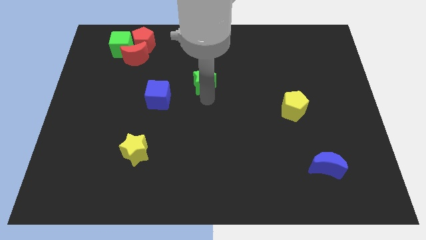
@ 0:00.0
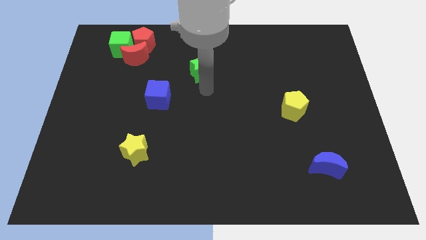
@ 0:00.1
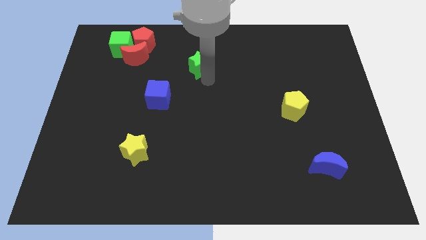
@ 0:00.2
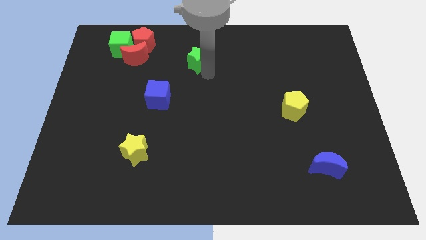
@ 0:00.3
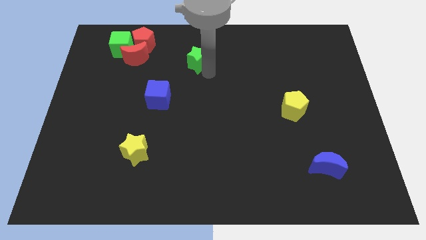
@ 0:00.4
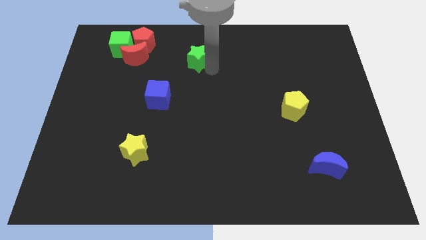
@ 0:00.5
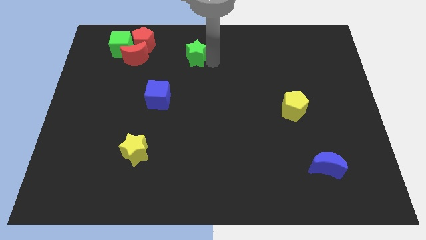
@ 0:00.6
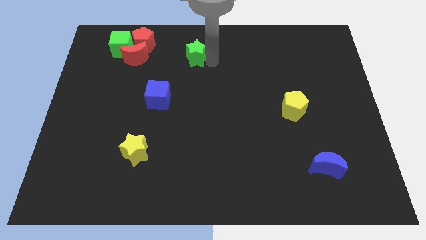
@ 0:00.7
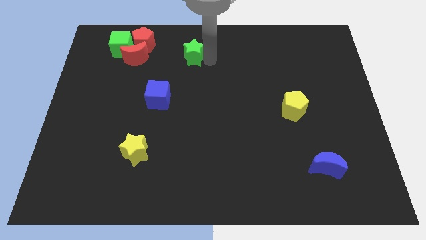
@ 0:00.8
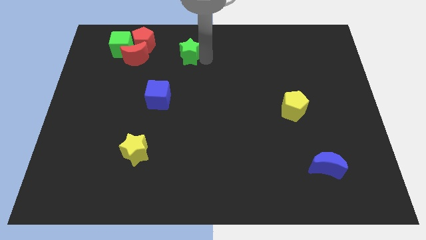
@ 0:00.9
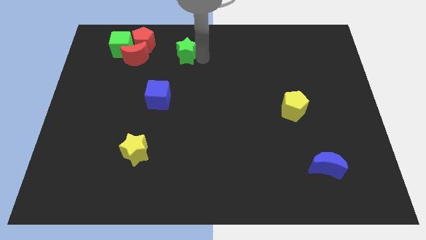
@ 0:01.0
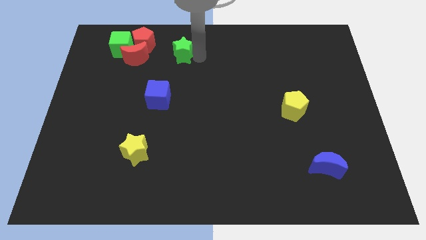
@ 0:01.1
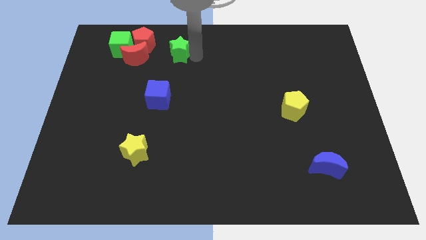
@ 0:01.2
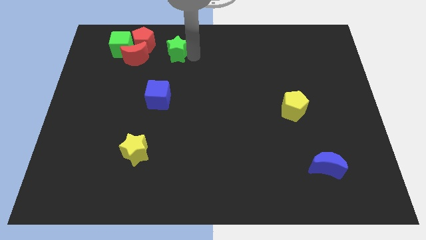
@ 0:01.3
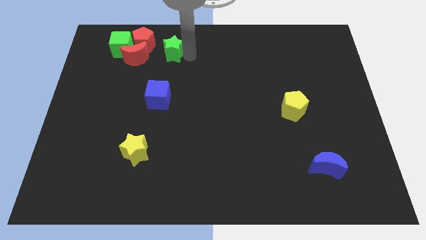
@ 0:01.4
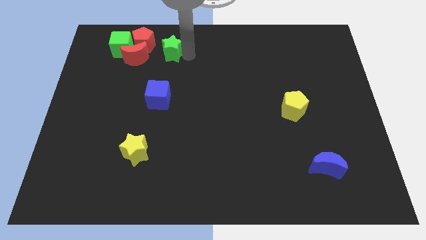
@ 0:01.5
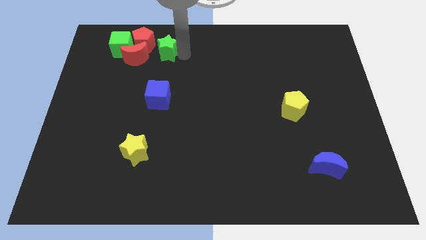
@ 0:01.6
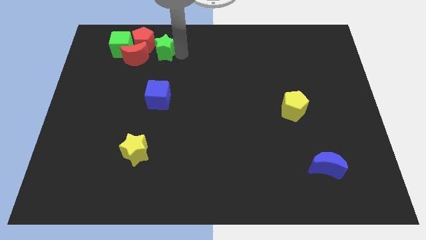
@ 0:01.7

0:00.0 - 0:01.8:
place the green star above the blue cube

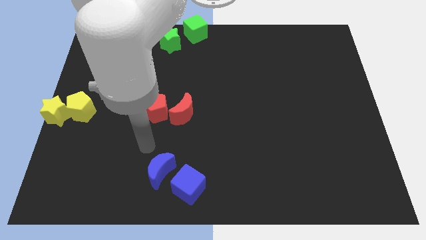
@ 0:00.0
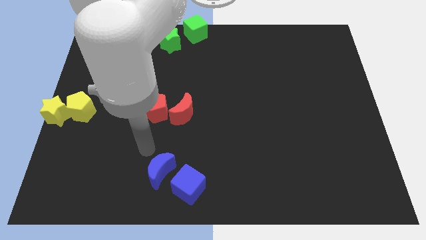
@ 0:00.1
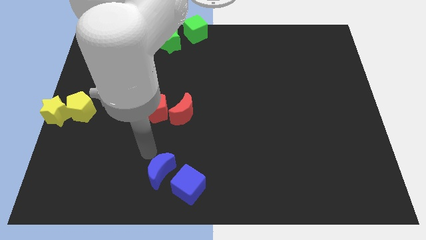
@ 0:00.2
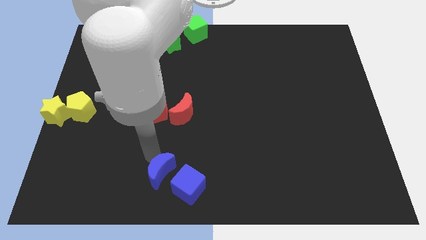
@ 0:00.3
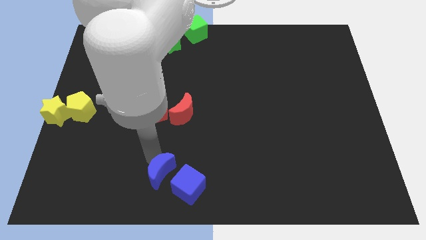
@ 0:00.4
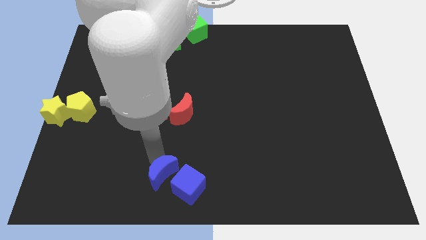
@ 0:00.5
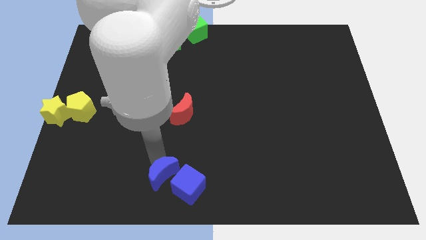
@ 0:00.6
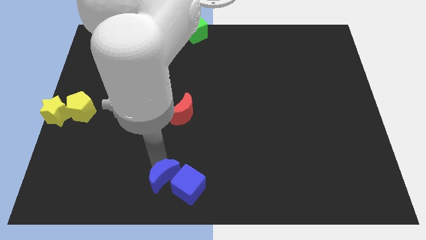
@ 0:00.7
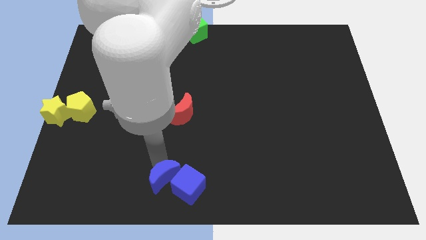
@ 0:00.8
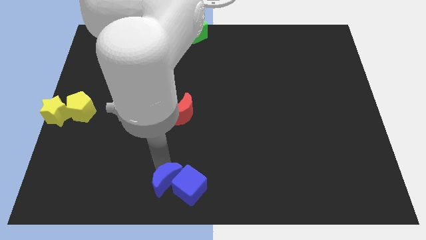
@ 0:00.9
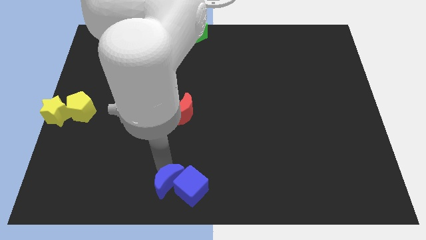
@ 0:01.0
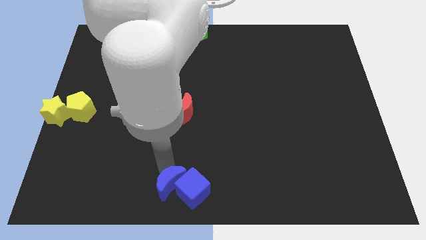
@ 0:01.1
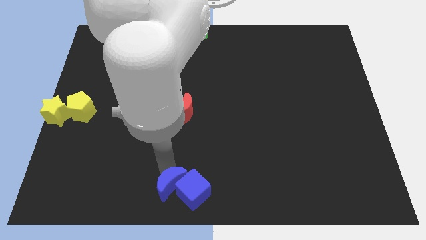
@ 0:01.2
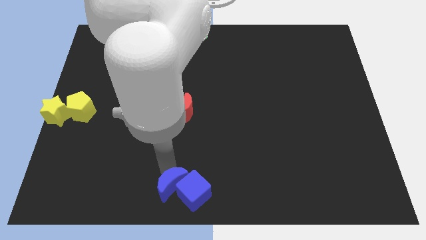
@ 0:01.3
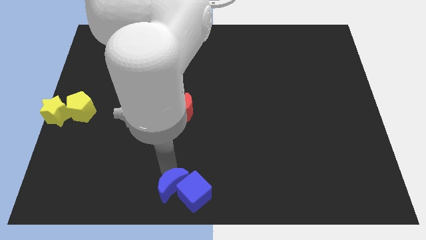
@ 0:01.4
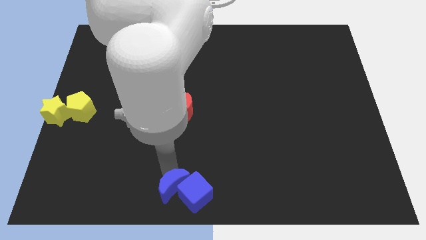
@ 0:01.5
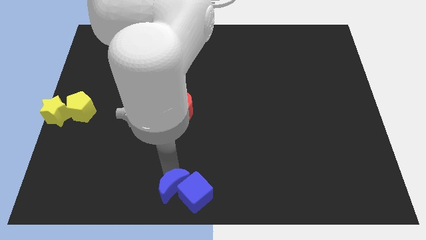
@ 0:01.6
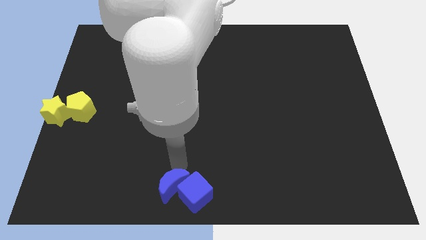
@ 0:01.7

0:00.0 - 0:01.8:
slightly move blue moon close to the blue cube

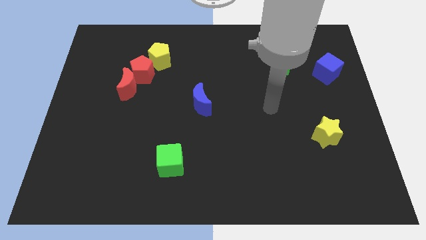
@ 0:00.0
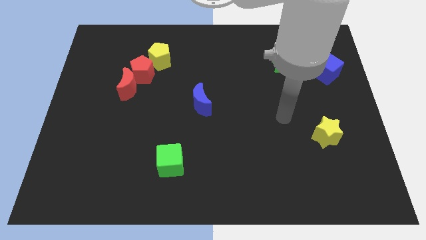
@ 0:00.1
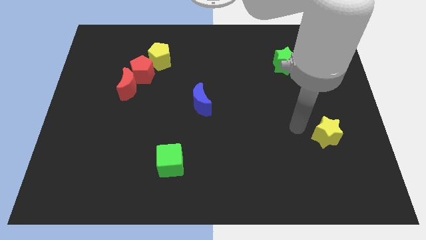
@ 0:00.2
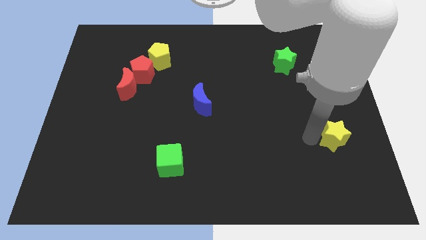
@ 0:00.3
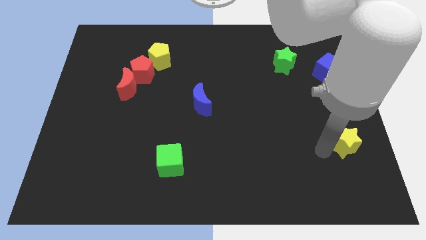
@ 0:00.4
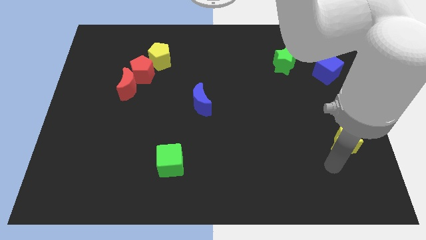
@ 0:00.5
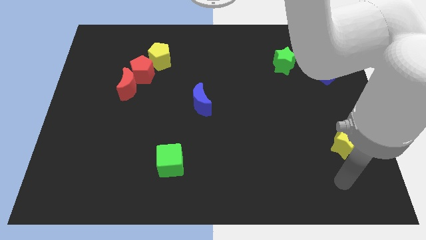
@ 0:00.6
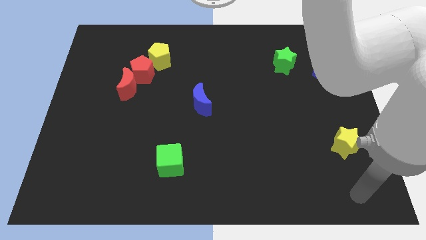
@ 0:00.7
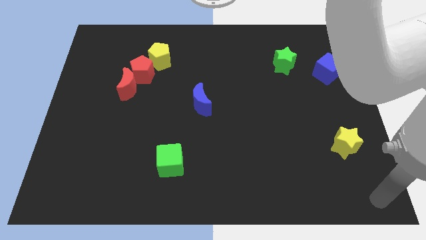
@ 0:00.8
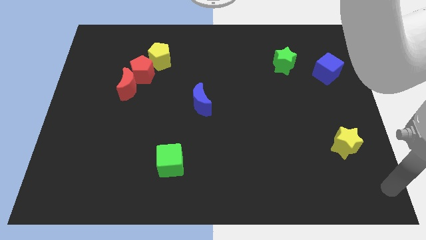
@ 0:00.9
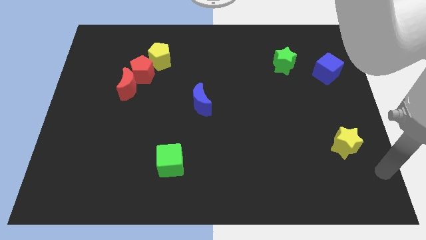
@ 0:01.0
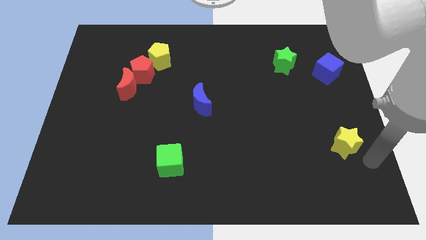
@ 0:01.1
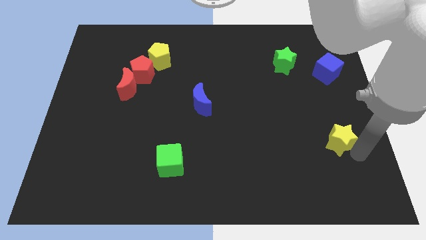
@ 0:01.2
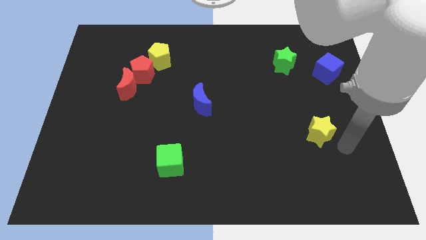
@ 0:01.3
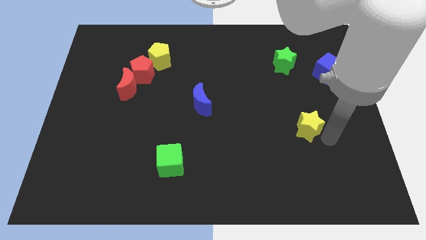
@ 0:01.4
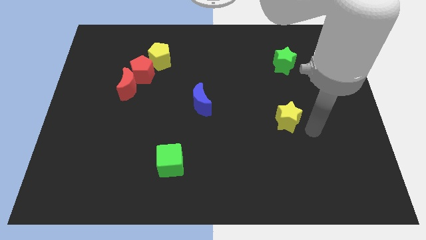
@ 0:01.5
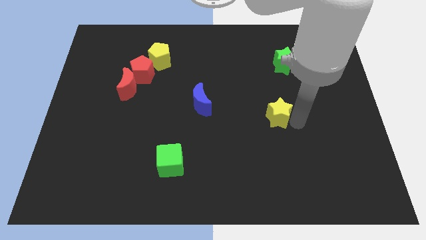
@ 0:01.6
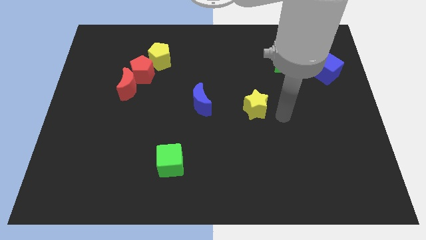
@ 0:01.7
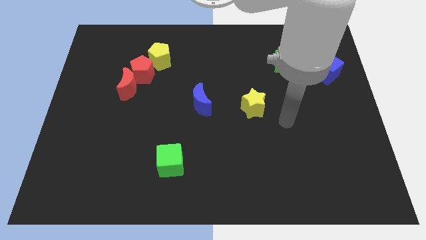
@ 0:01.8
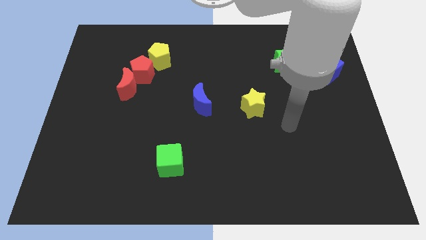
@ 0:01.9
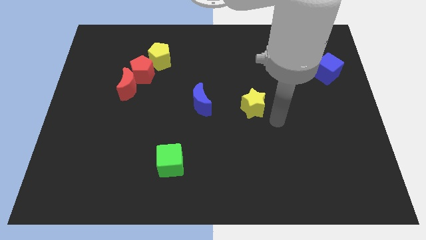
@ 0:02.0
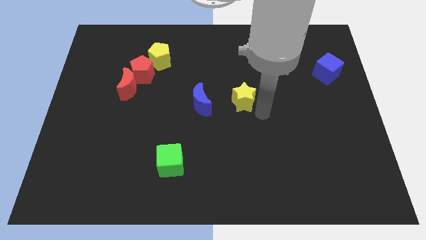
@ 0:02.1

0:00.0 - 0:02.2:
slide the yellow star towards the center

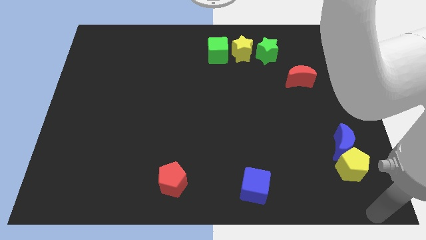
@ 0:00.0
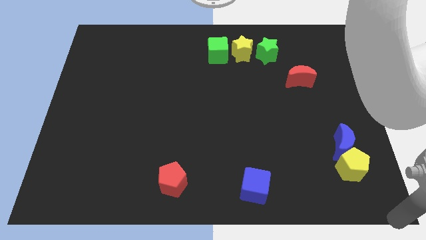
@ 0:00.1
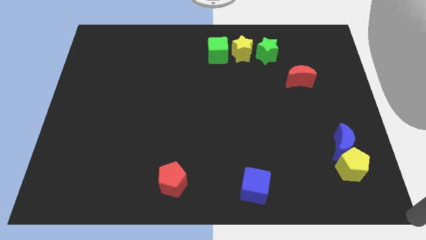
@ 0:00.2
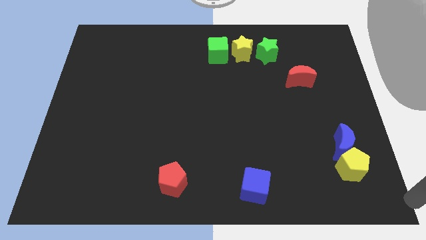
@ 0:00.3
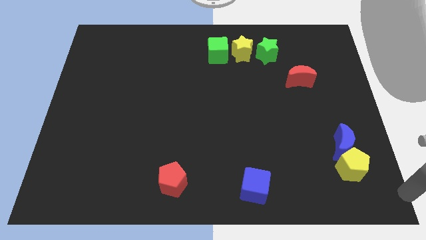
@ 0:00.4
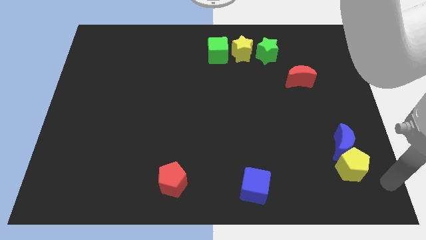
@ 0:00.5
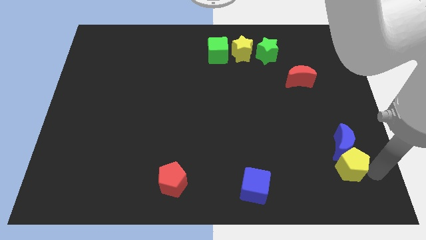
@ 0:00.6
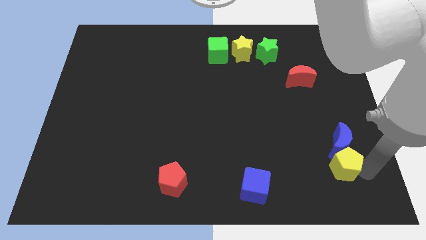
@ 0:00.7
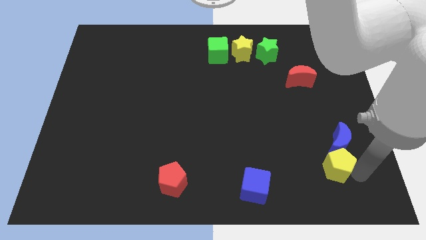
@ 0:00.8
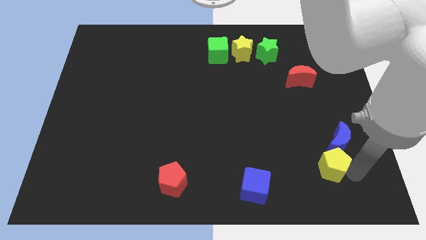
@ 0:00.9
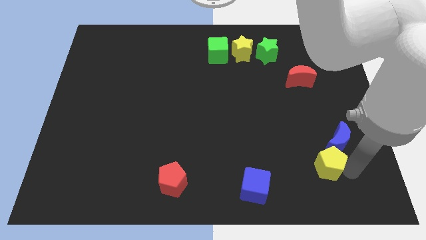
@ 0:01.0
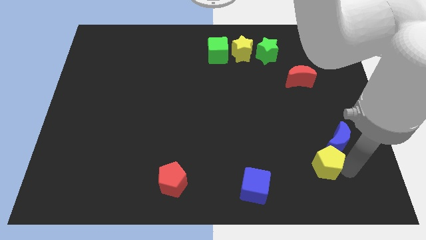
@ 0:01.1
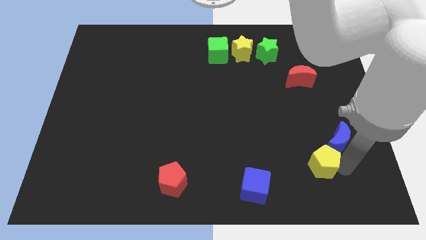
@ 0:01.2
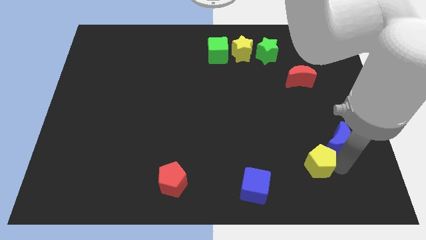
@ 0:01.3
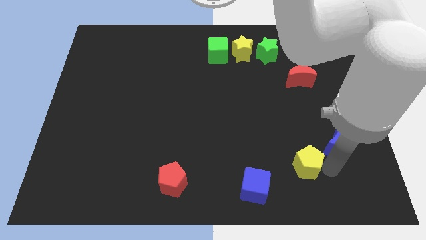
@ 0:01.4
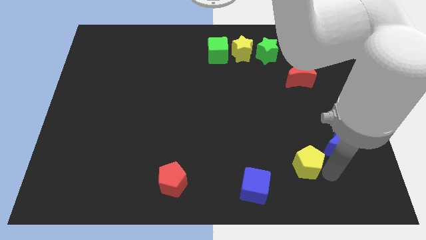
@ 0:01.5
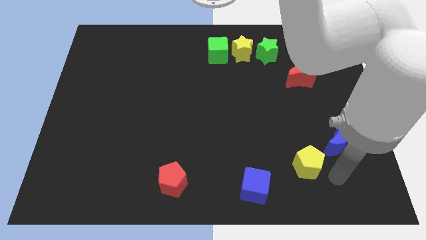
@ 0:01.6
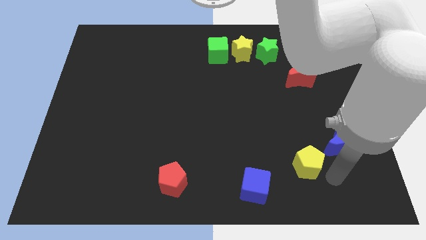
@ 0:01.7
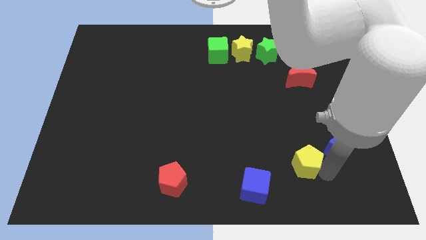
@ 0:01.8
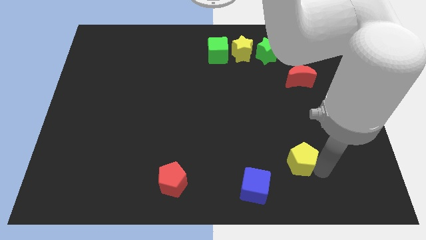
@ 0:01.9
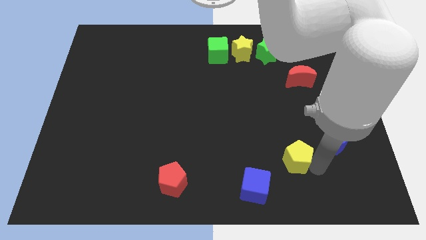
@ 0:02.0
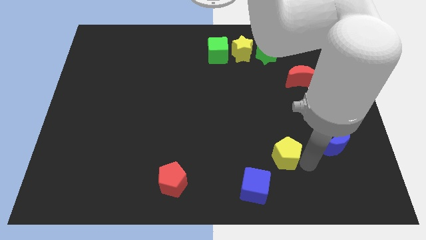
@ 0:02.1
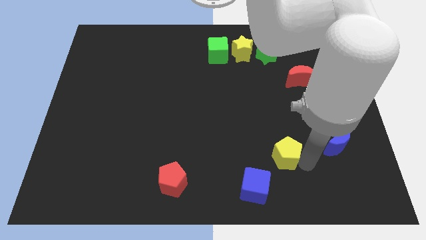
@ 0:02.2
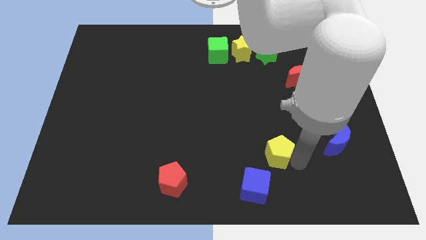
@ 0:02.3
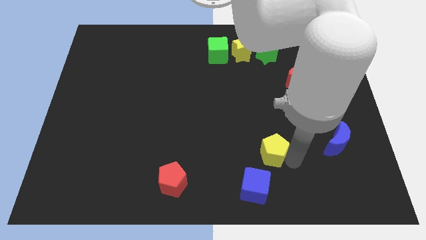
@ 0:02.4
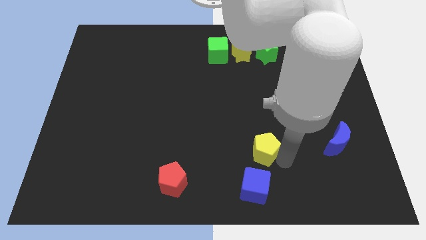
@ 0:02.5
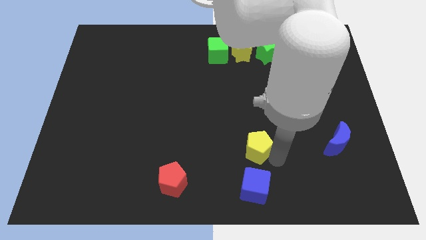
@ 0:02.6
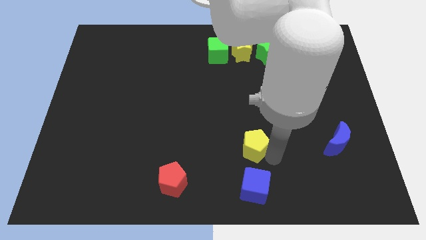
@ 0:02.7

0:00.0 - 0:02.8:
place yellow pentagon on top of blue cube

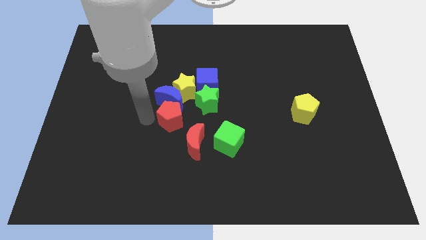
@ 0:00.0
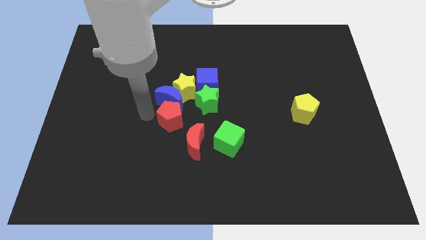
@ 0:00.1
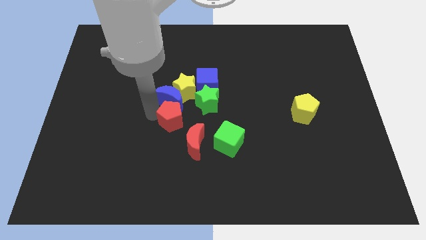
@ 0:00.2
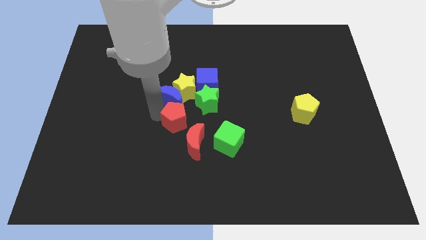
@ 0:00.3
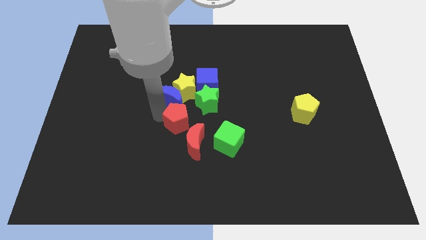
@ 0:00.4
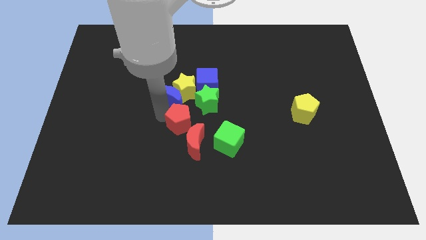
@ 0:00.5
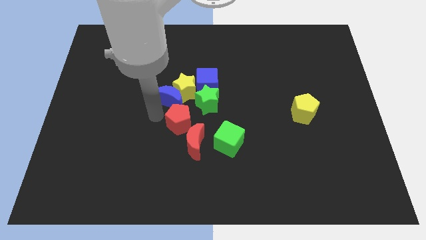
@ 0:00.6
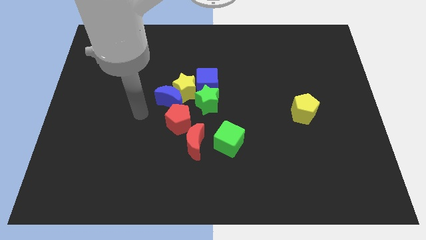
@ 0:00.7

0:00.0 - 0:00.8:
push red pentagon slightly down
